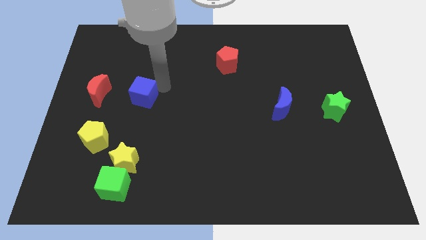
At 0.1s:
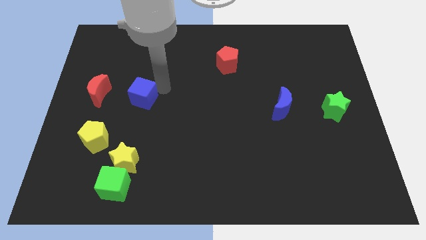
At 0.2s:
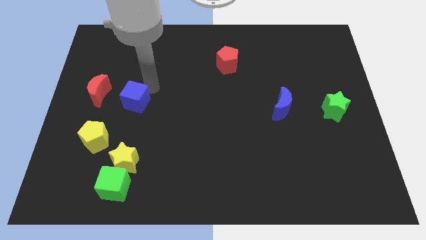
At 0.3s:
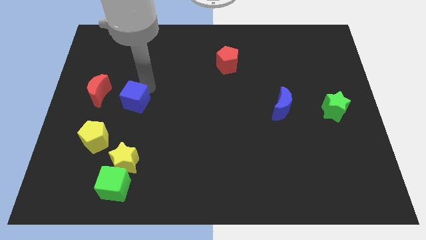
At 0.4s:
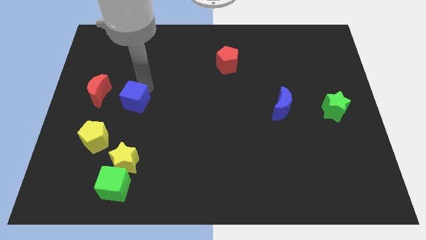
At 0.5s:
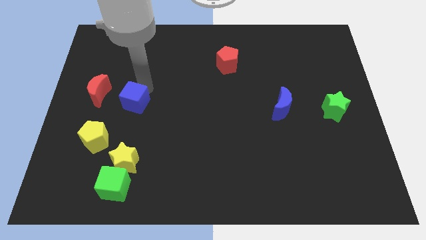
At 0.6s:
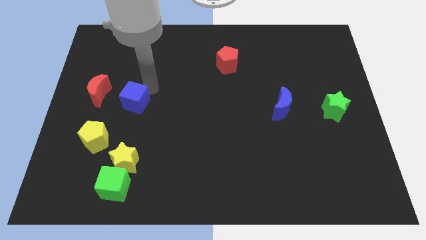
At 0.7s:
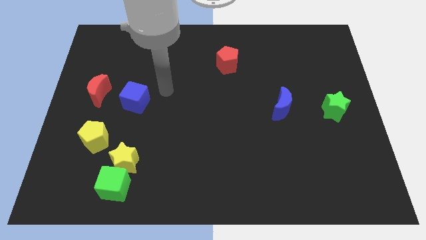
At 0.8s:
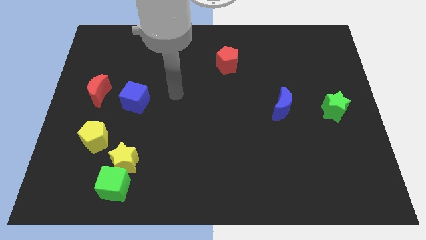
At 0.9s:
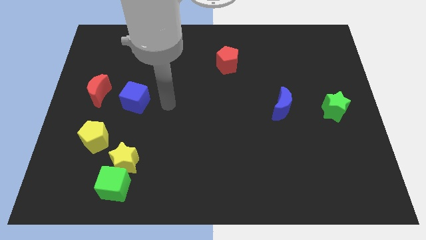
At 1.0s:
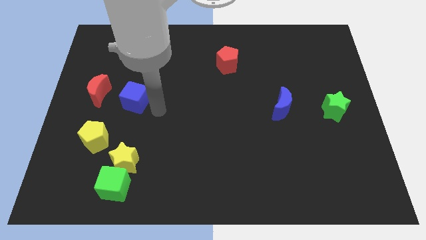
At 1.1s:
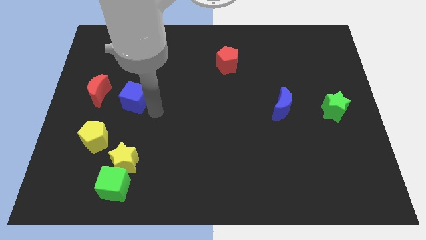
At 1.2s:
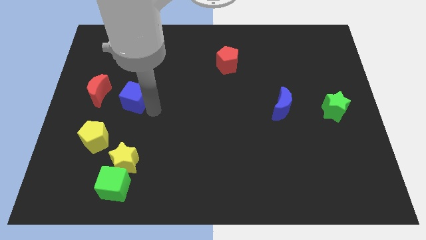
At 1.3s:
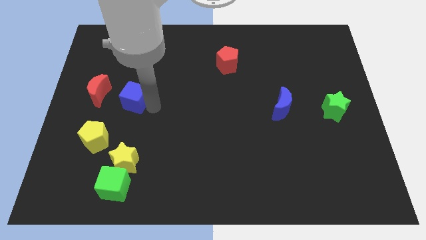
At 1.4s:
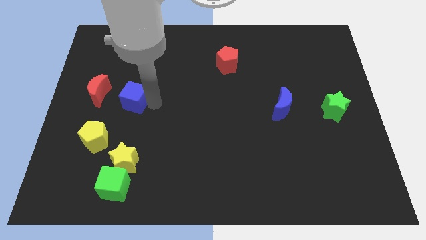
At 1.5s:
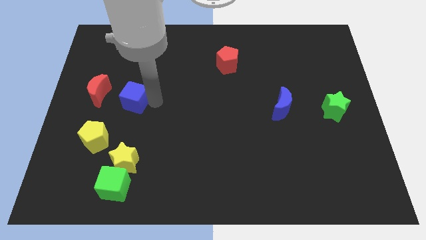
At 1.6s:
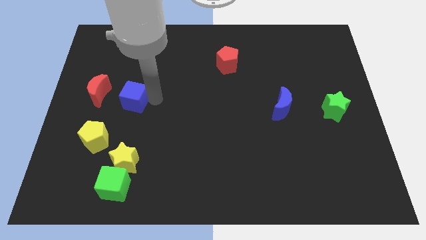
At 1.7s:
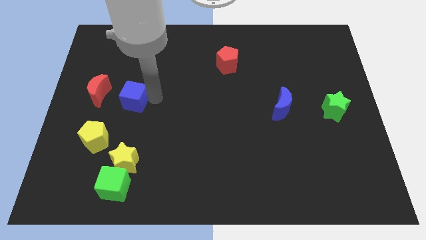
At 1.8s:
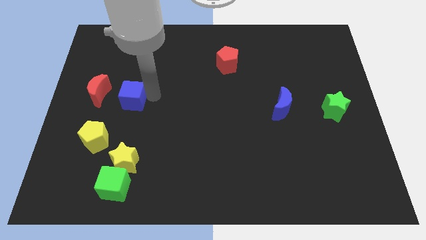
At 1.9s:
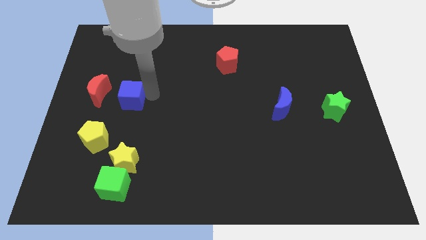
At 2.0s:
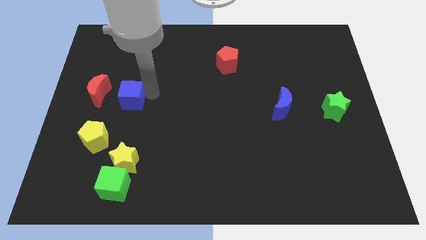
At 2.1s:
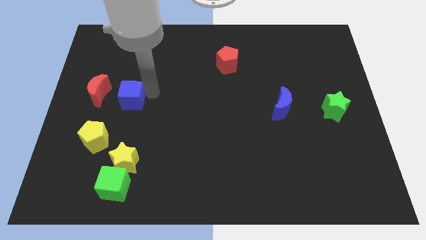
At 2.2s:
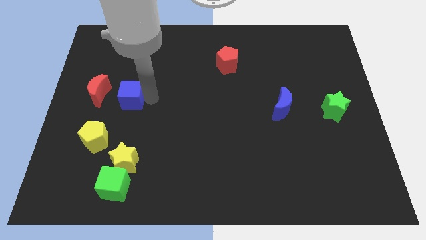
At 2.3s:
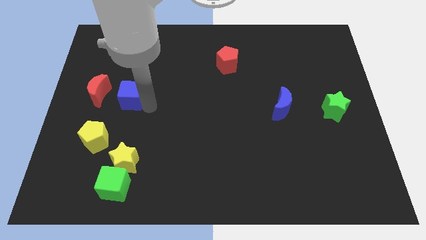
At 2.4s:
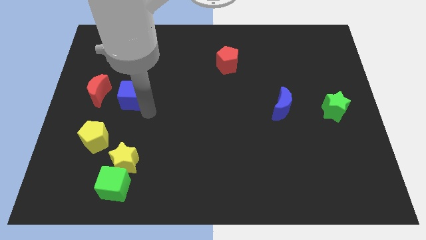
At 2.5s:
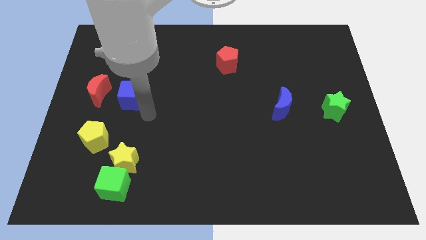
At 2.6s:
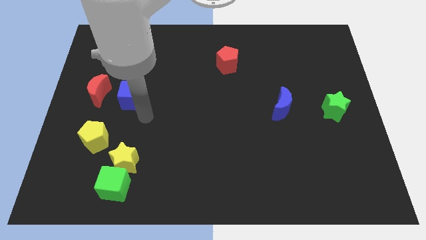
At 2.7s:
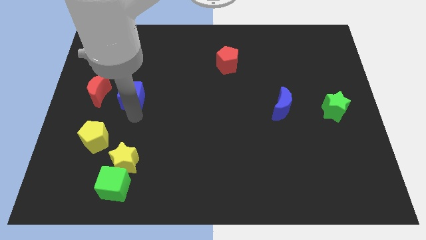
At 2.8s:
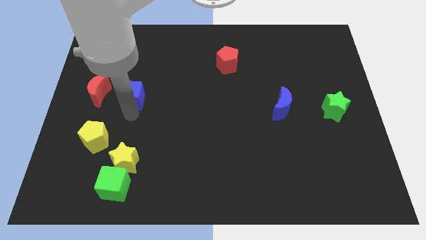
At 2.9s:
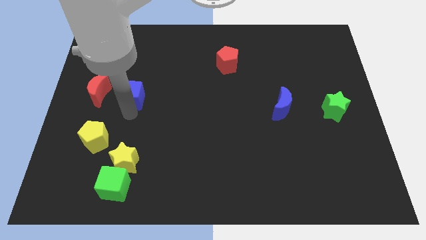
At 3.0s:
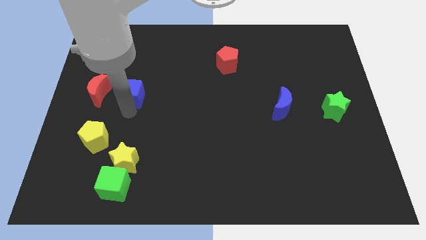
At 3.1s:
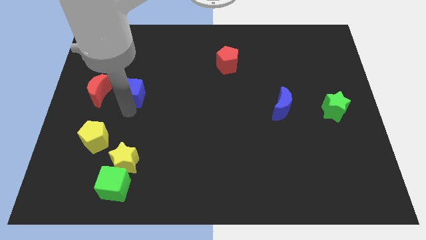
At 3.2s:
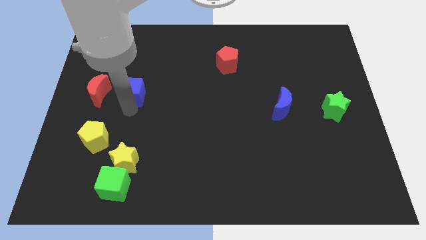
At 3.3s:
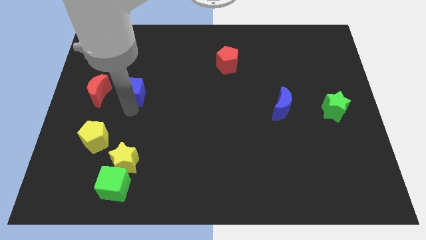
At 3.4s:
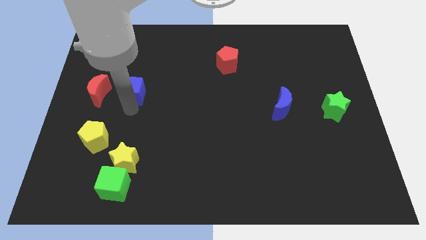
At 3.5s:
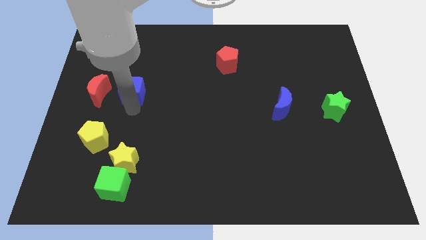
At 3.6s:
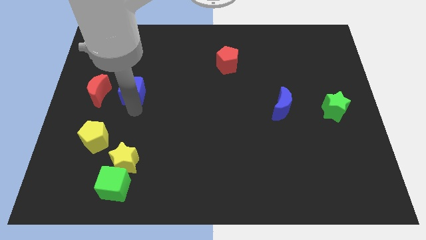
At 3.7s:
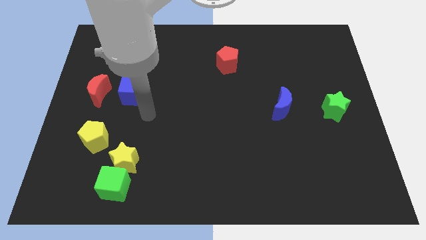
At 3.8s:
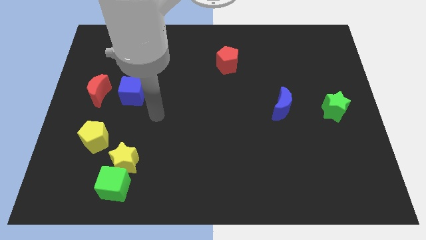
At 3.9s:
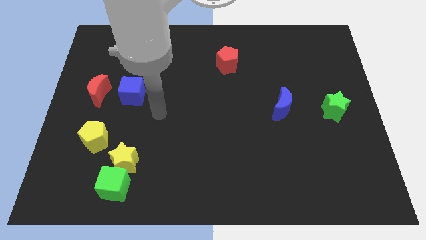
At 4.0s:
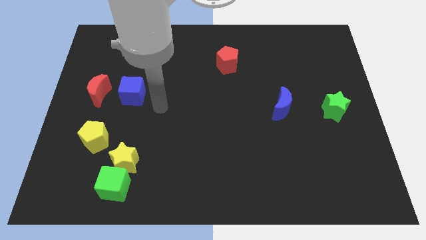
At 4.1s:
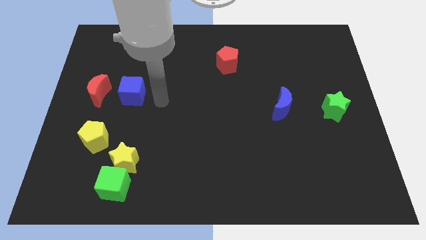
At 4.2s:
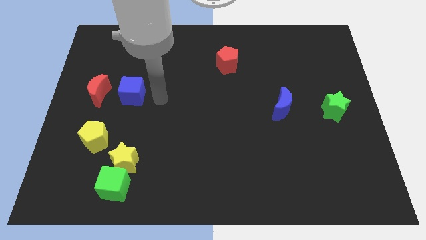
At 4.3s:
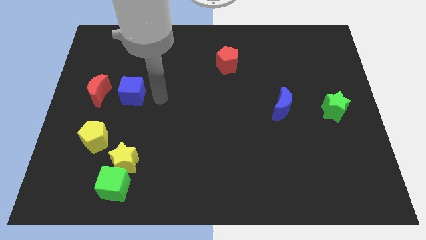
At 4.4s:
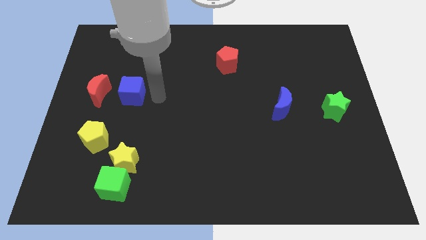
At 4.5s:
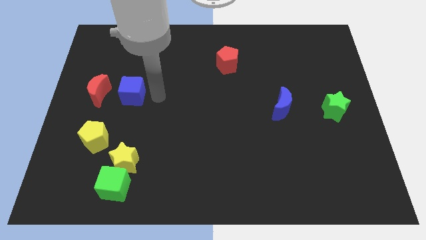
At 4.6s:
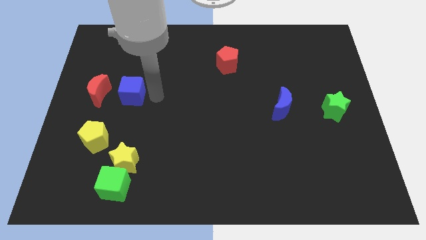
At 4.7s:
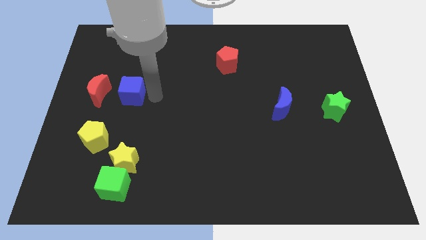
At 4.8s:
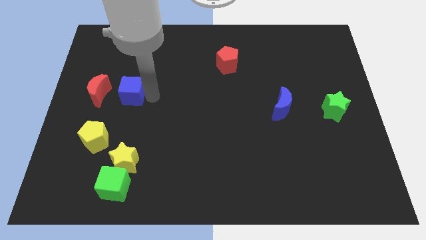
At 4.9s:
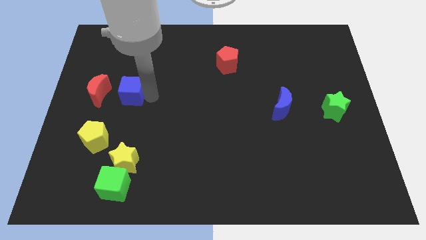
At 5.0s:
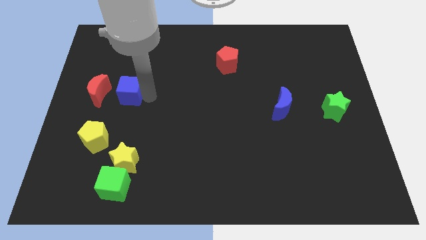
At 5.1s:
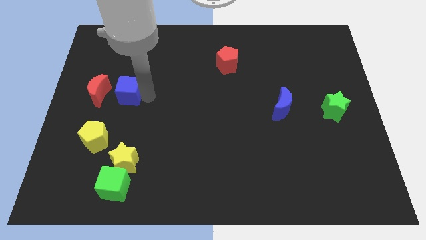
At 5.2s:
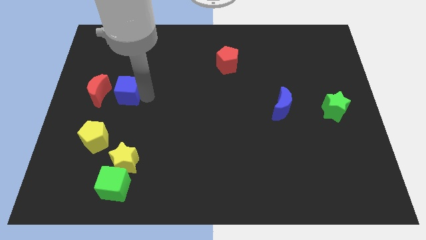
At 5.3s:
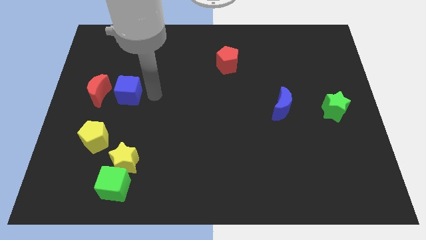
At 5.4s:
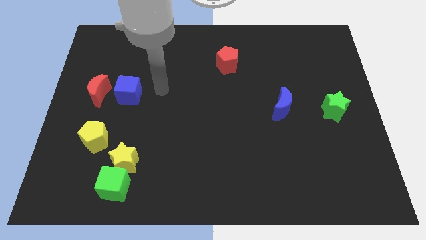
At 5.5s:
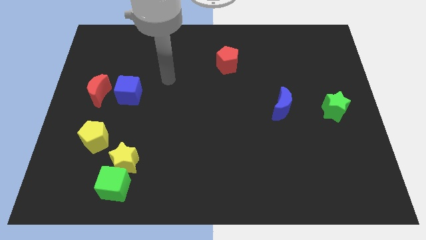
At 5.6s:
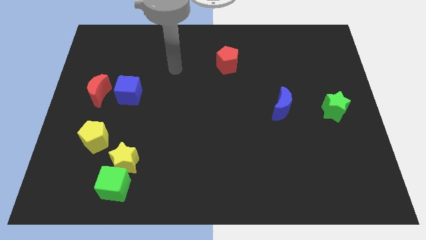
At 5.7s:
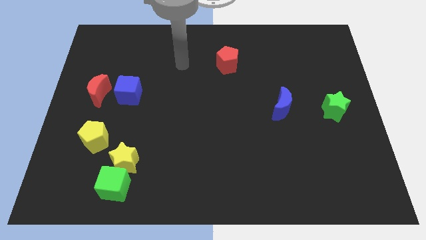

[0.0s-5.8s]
move the blue cube near the red crescent

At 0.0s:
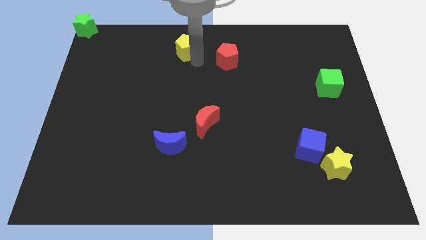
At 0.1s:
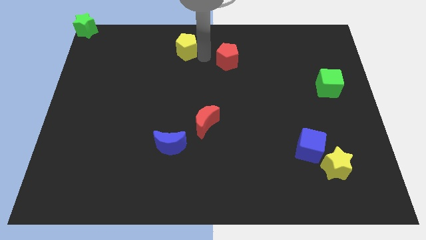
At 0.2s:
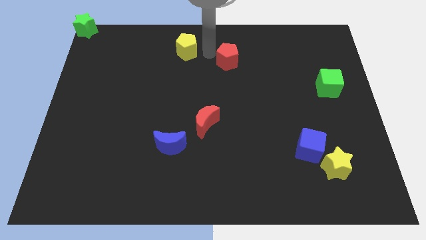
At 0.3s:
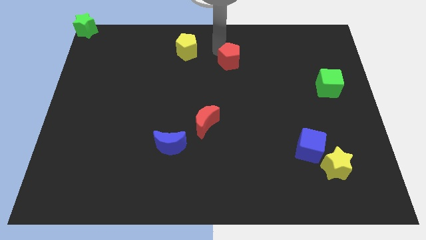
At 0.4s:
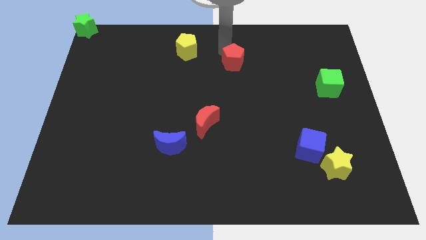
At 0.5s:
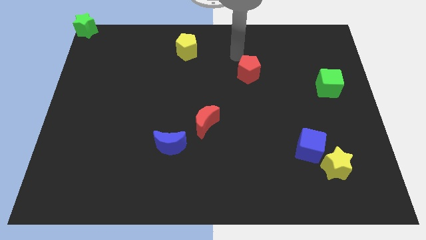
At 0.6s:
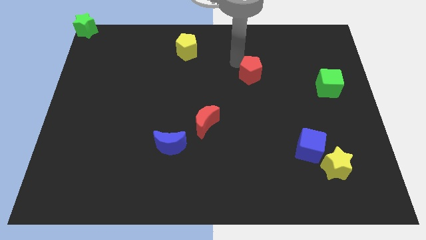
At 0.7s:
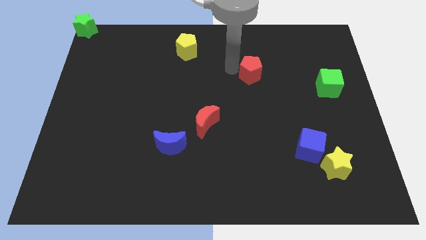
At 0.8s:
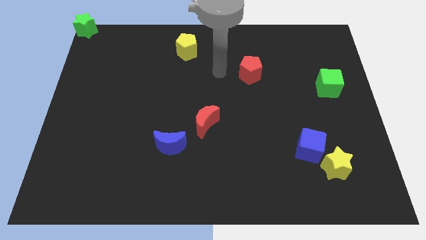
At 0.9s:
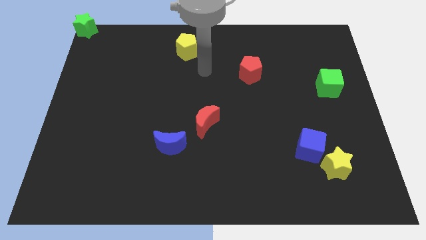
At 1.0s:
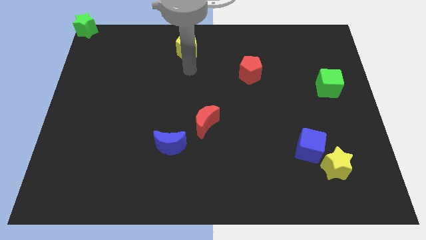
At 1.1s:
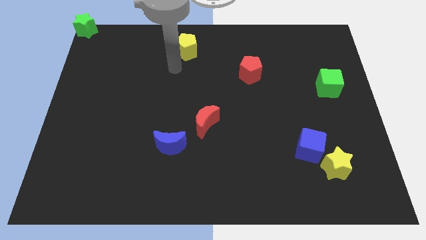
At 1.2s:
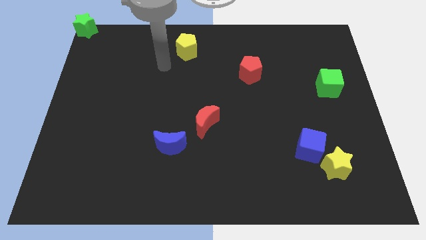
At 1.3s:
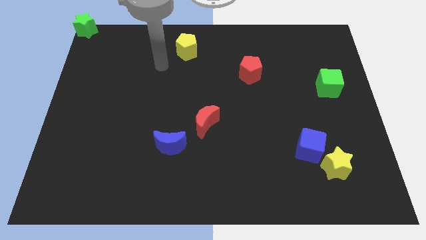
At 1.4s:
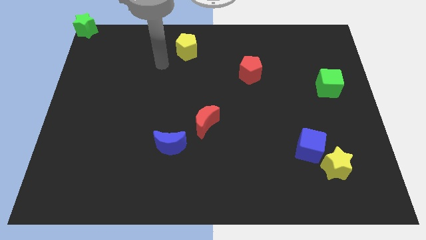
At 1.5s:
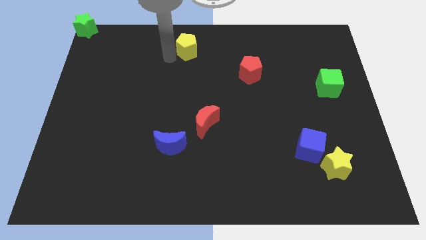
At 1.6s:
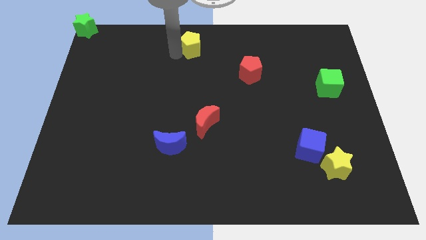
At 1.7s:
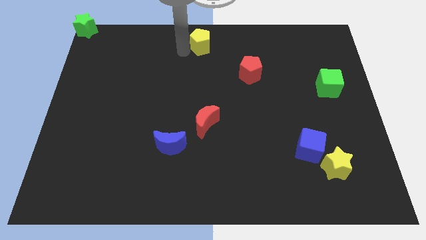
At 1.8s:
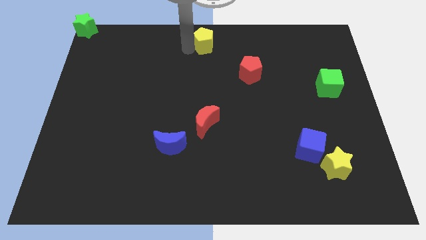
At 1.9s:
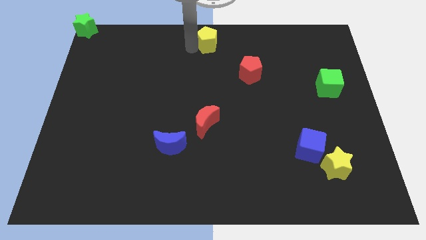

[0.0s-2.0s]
place yellow pentagon to the top center

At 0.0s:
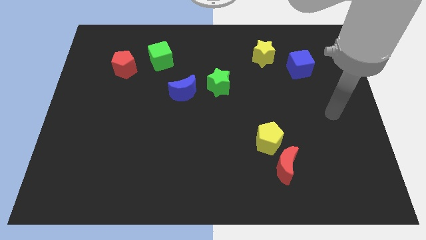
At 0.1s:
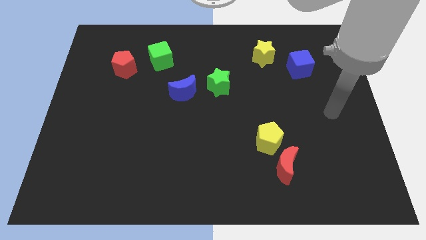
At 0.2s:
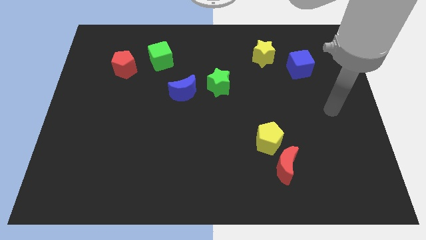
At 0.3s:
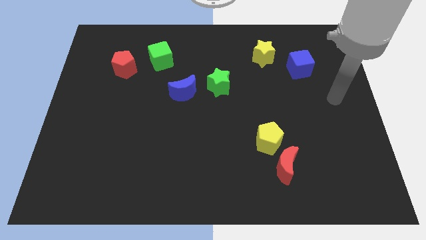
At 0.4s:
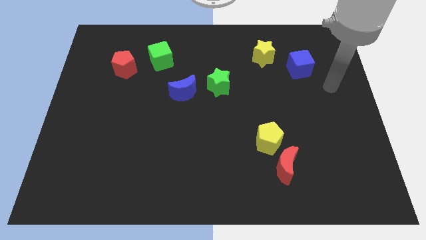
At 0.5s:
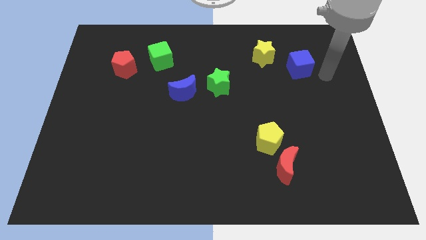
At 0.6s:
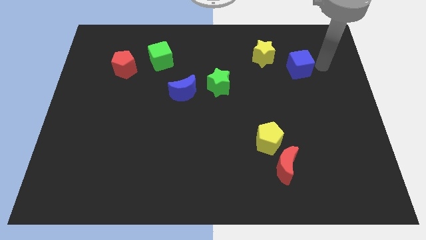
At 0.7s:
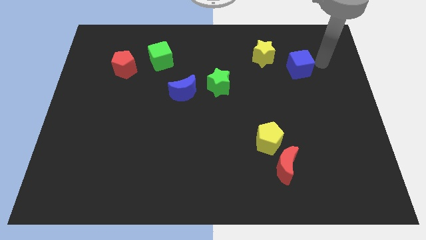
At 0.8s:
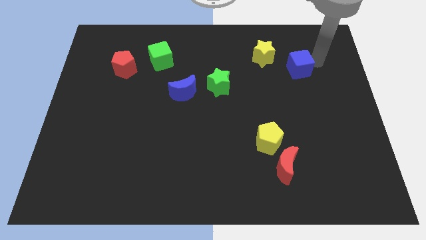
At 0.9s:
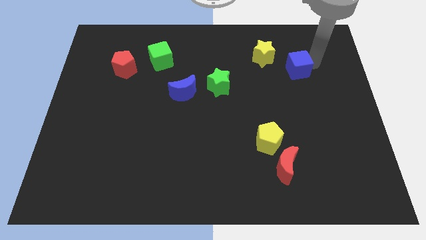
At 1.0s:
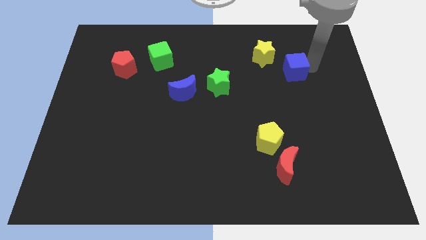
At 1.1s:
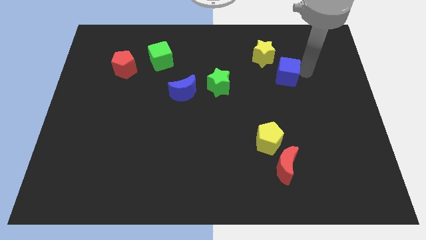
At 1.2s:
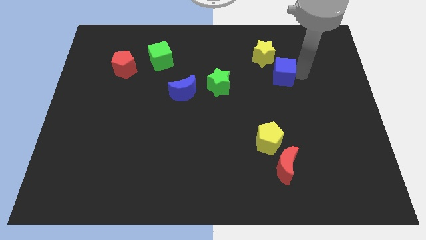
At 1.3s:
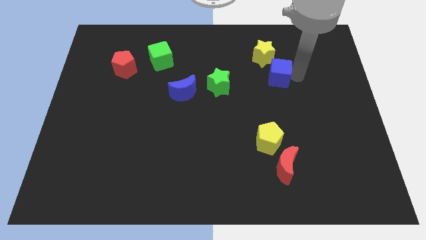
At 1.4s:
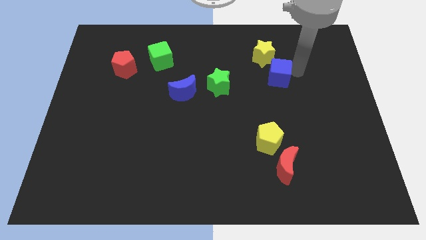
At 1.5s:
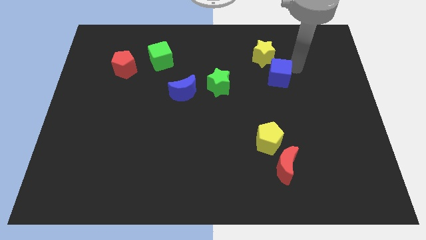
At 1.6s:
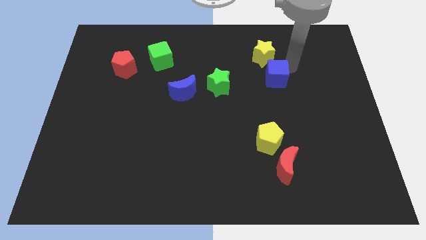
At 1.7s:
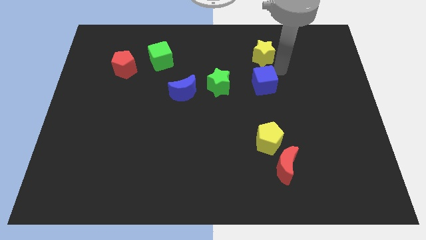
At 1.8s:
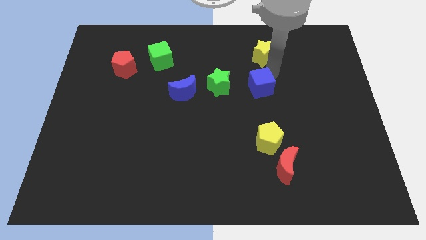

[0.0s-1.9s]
place the blue cube underneath the yellow star
